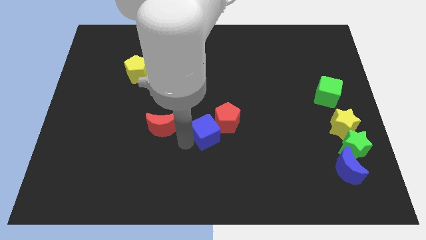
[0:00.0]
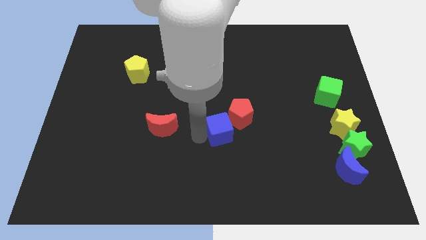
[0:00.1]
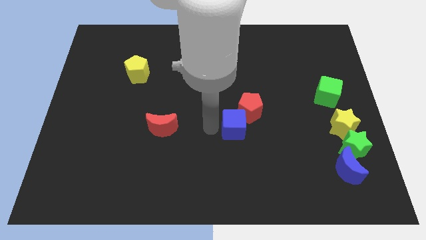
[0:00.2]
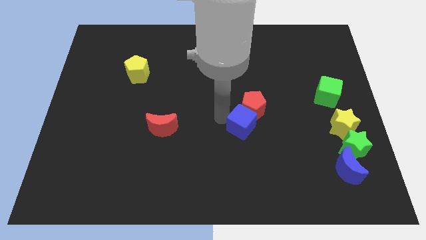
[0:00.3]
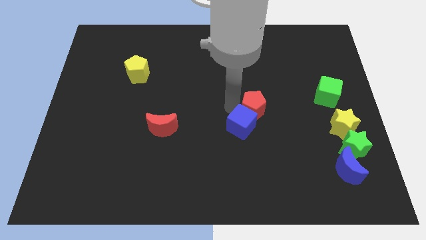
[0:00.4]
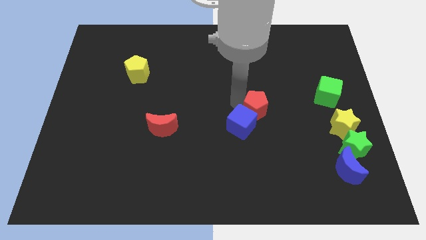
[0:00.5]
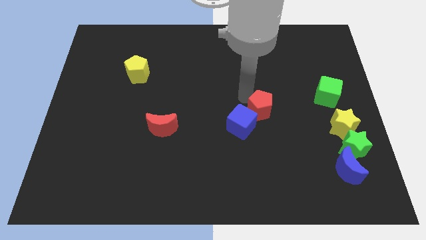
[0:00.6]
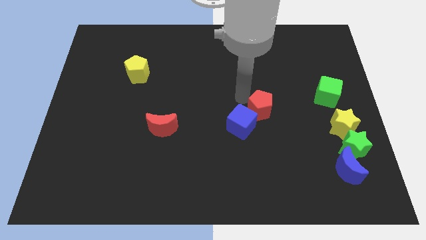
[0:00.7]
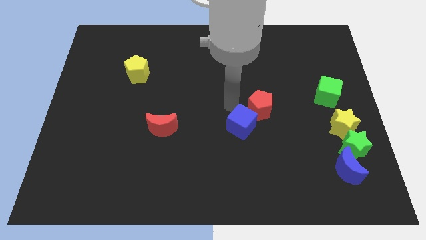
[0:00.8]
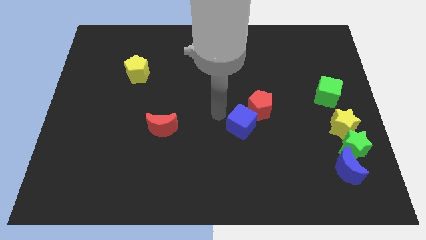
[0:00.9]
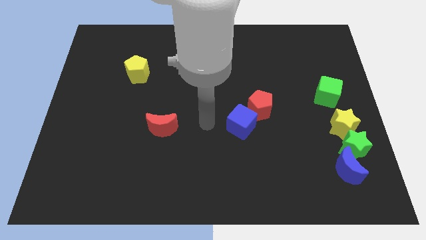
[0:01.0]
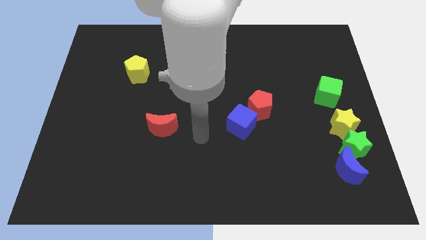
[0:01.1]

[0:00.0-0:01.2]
place your arm to the center of the board

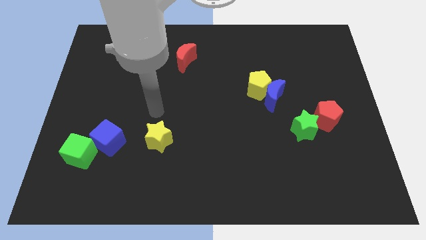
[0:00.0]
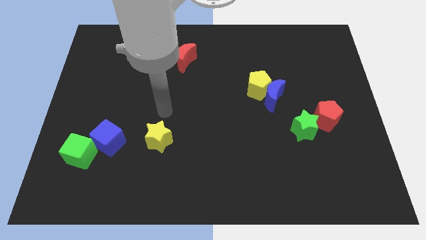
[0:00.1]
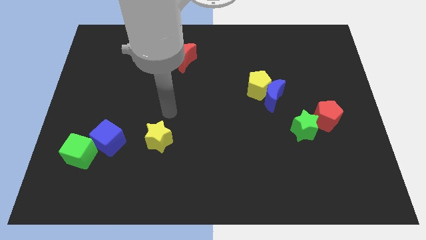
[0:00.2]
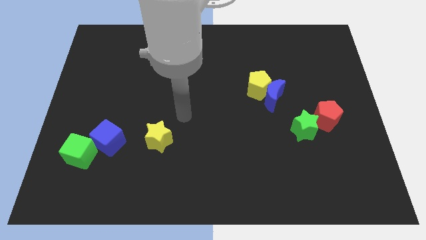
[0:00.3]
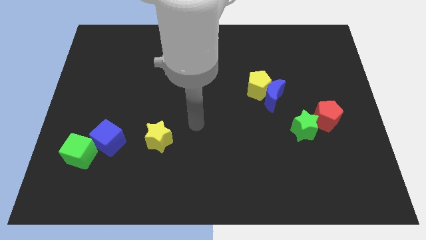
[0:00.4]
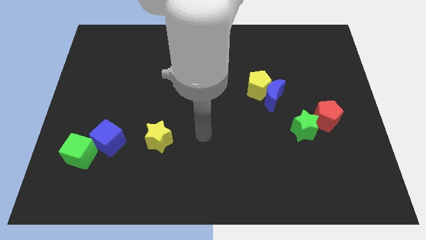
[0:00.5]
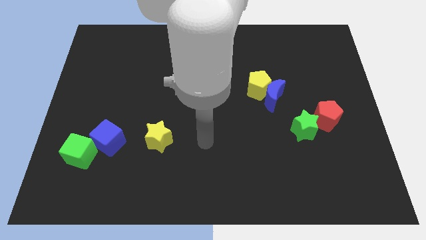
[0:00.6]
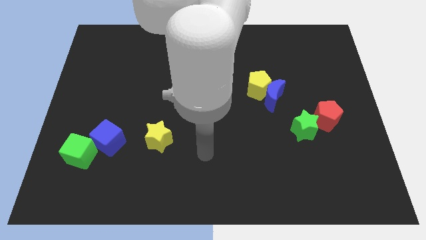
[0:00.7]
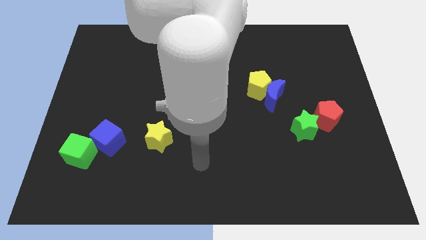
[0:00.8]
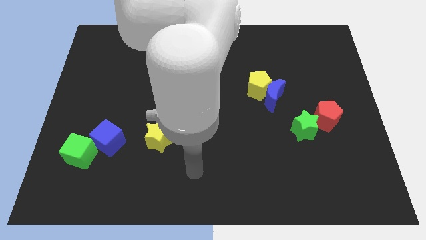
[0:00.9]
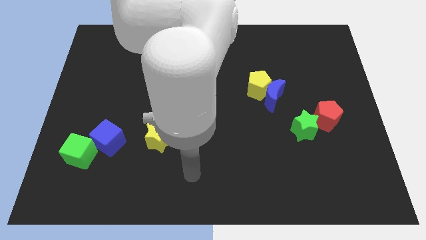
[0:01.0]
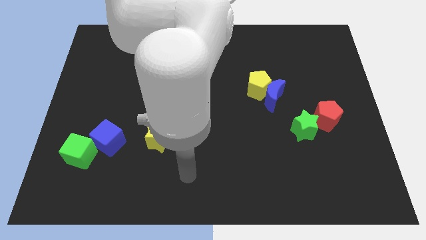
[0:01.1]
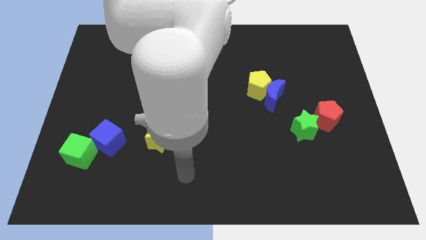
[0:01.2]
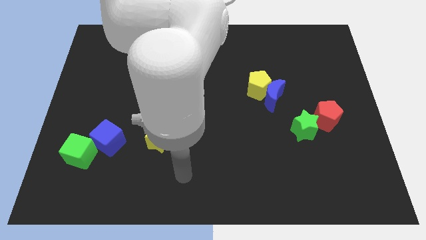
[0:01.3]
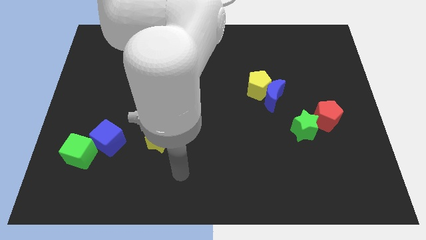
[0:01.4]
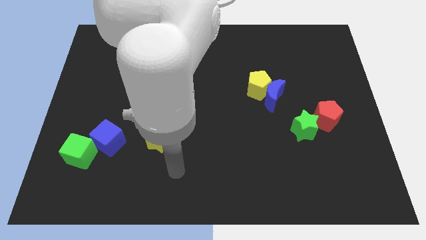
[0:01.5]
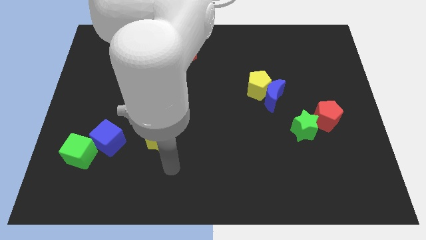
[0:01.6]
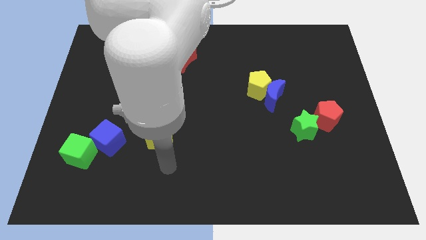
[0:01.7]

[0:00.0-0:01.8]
go near the yellow star

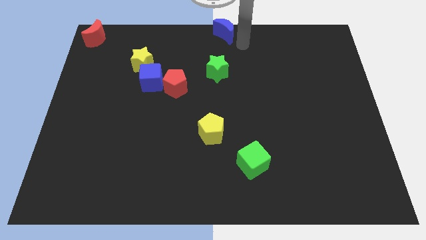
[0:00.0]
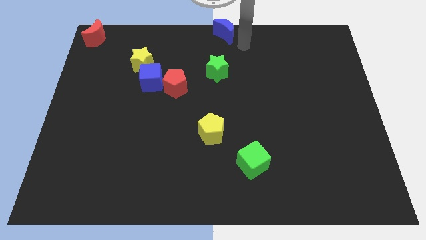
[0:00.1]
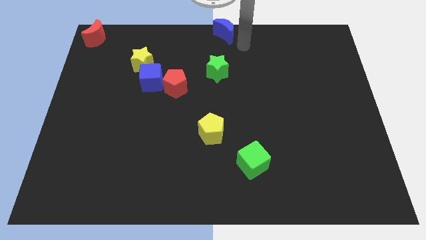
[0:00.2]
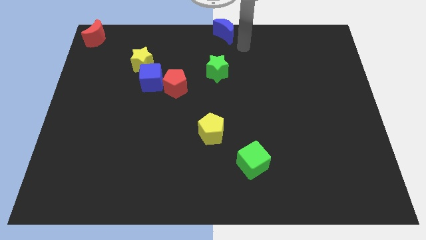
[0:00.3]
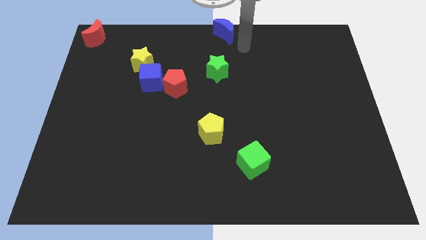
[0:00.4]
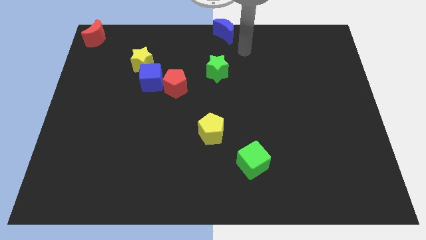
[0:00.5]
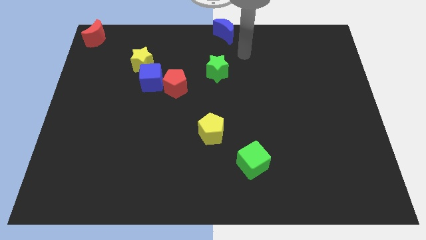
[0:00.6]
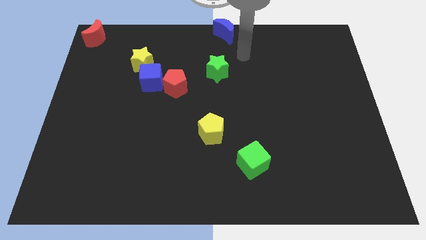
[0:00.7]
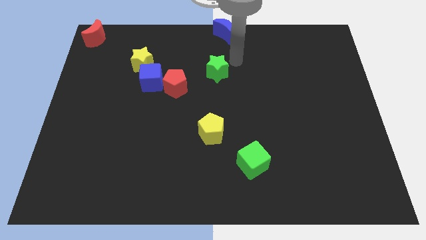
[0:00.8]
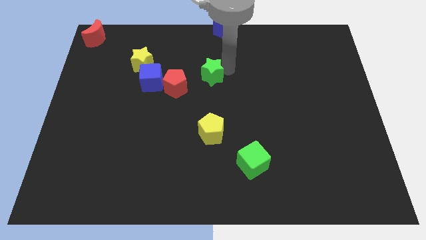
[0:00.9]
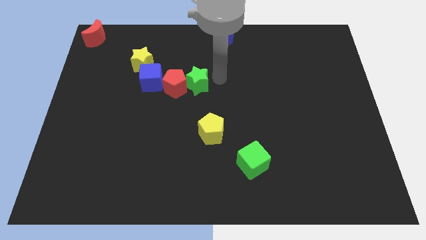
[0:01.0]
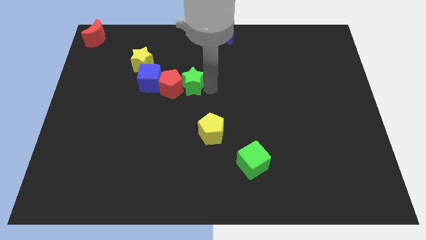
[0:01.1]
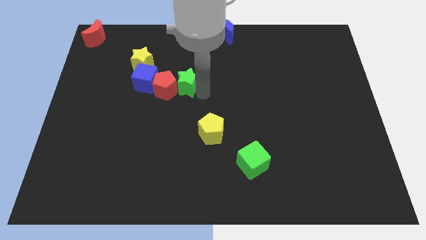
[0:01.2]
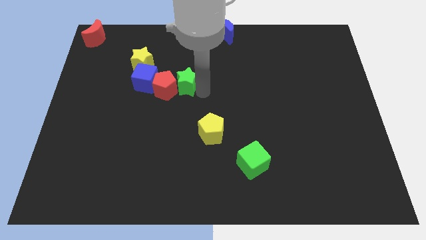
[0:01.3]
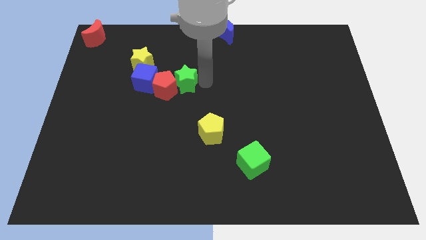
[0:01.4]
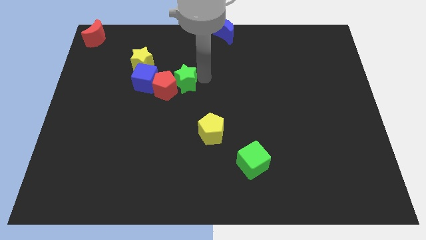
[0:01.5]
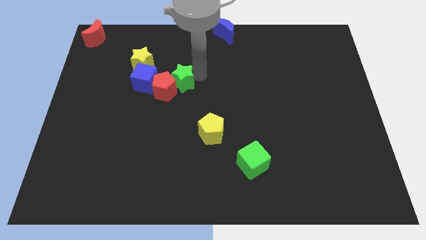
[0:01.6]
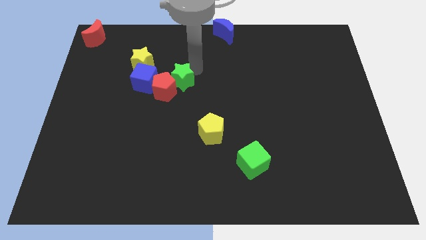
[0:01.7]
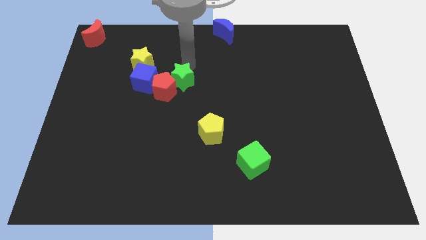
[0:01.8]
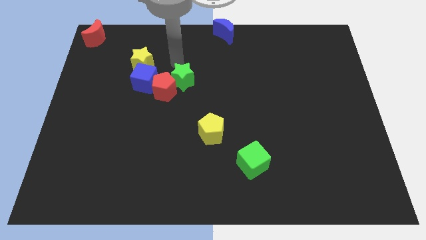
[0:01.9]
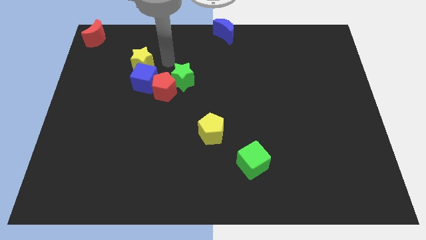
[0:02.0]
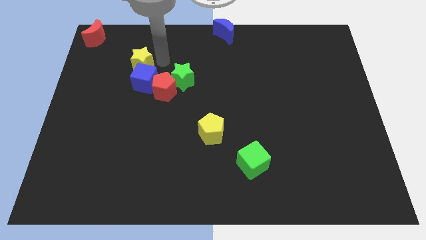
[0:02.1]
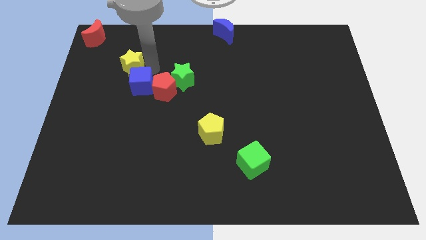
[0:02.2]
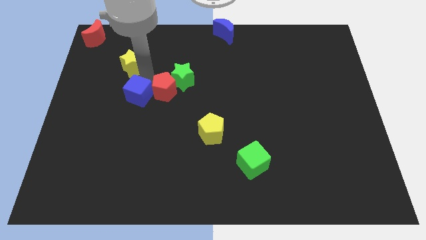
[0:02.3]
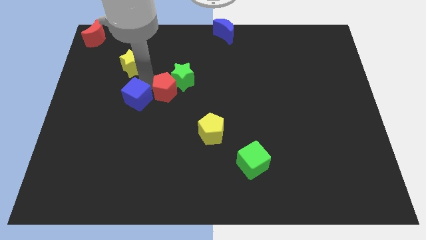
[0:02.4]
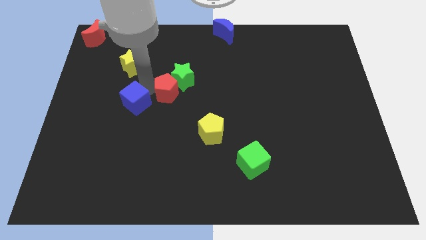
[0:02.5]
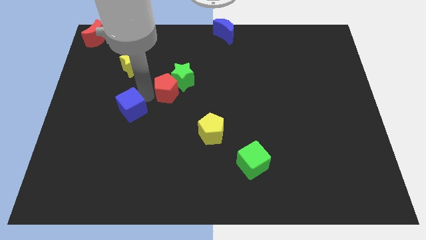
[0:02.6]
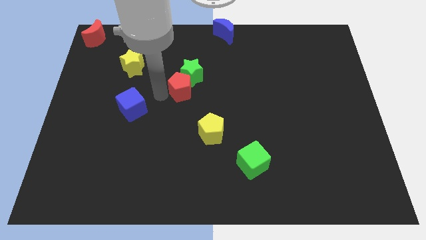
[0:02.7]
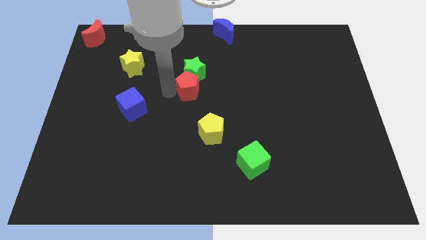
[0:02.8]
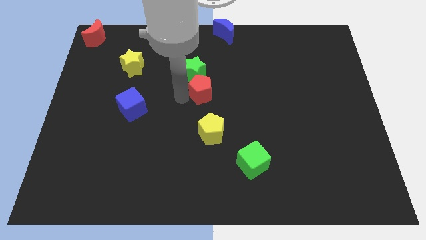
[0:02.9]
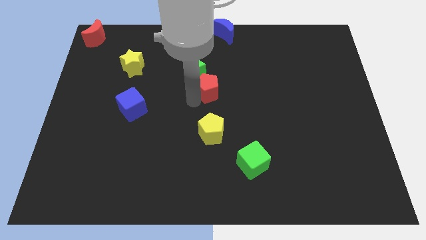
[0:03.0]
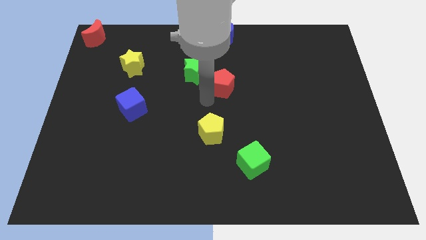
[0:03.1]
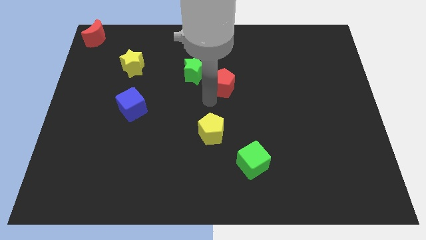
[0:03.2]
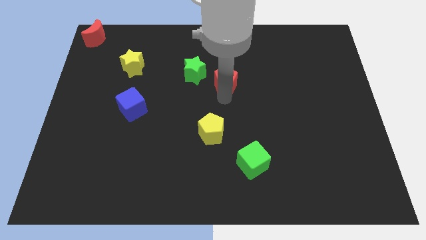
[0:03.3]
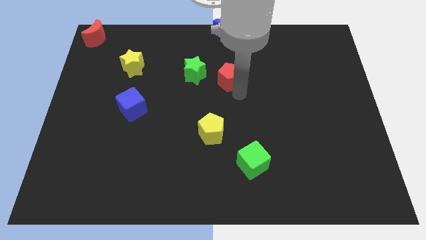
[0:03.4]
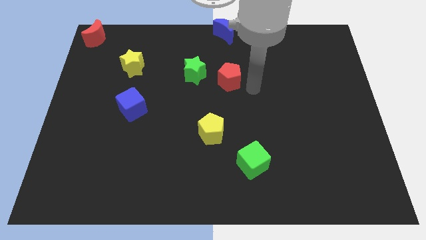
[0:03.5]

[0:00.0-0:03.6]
push red pentagon diagonal towards yellow pentagon

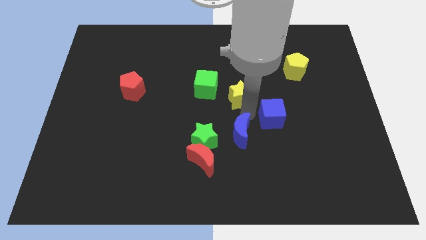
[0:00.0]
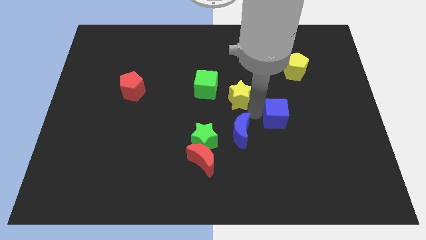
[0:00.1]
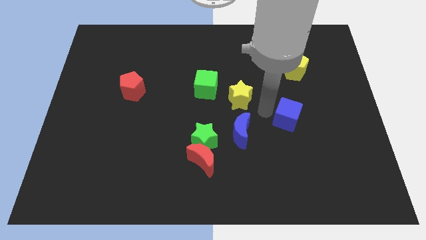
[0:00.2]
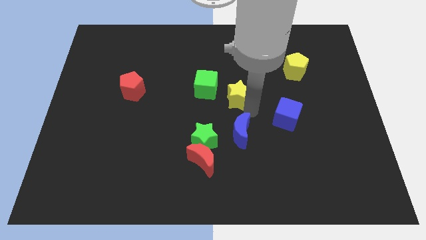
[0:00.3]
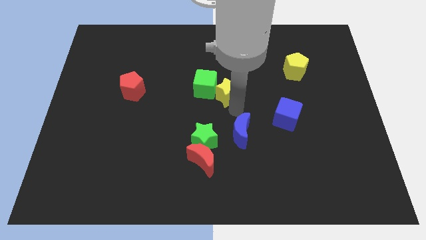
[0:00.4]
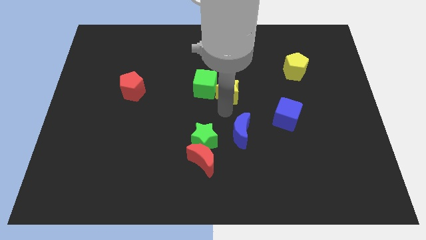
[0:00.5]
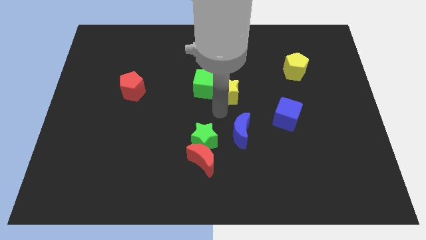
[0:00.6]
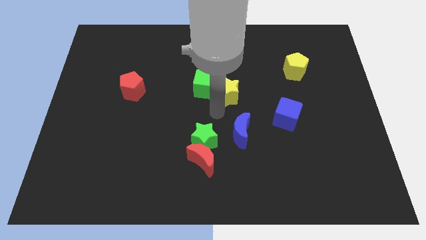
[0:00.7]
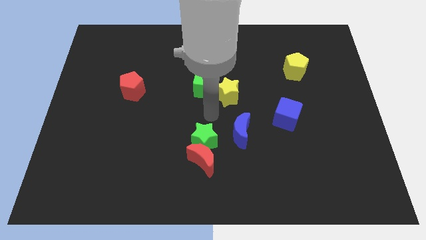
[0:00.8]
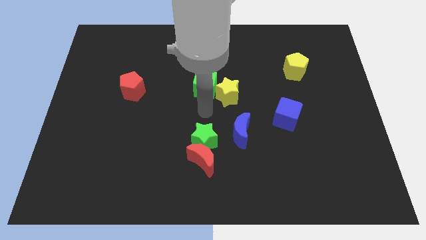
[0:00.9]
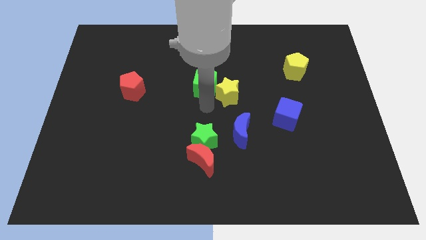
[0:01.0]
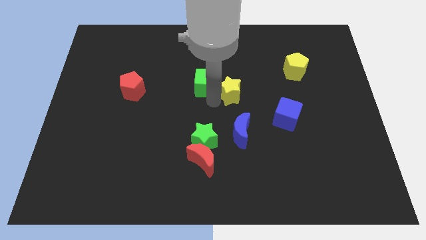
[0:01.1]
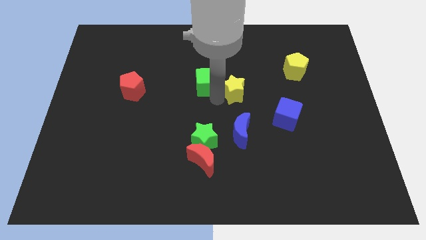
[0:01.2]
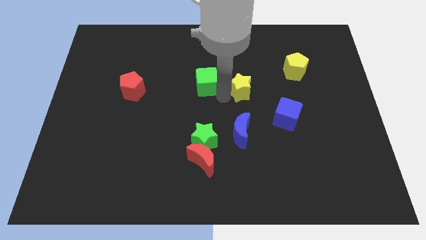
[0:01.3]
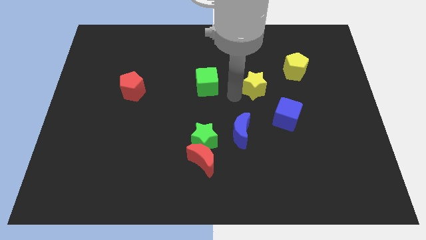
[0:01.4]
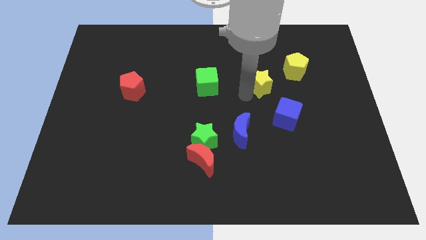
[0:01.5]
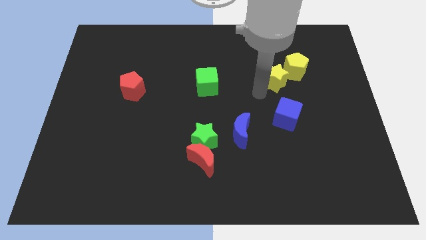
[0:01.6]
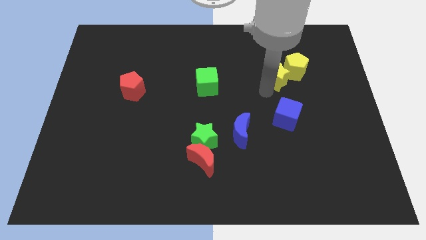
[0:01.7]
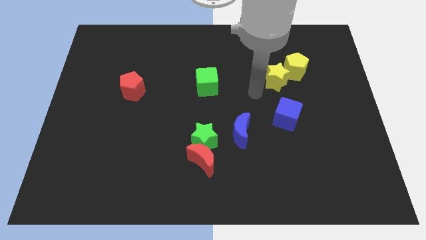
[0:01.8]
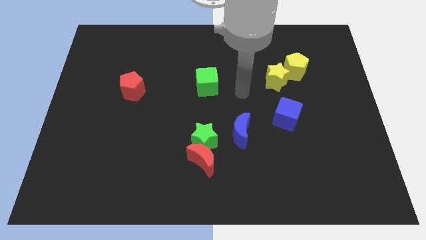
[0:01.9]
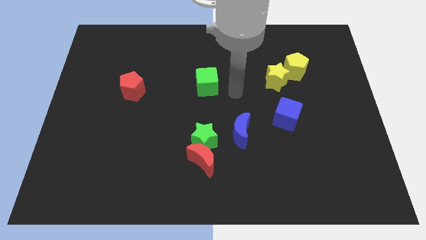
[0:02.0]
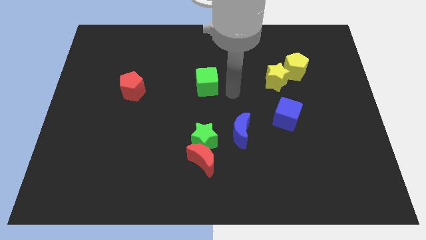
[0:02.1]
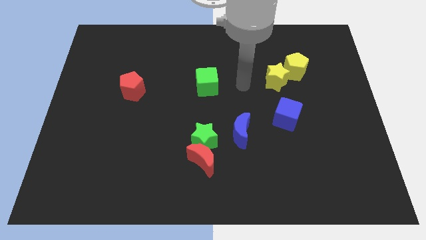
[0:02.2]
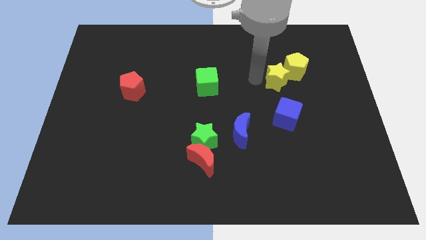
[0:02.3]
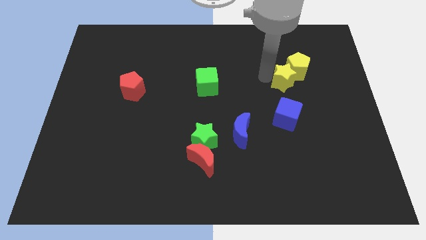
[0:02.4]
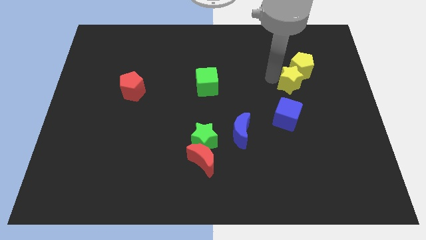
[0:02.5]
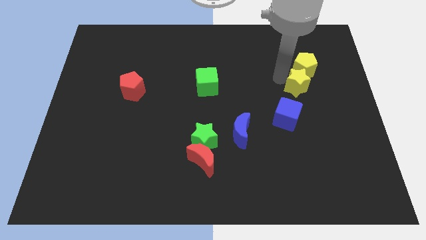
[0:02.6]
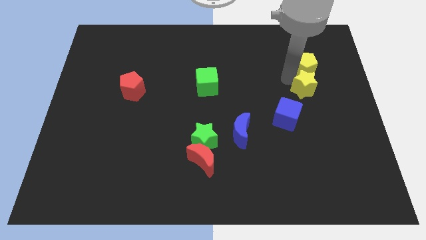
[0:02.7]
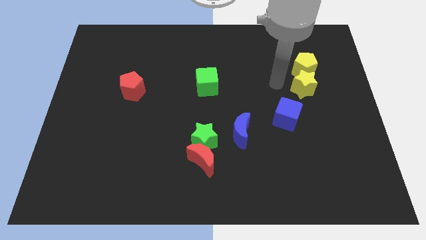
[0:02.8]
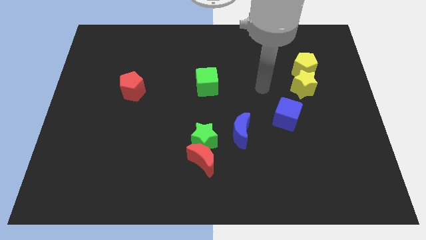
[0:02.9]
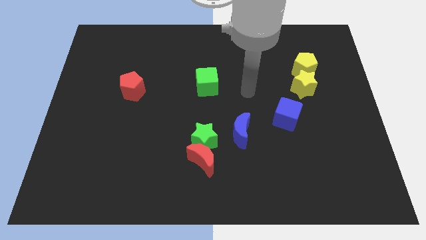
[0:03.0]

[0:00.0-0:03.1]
place yellow star to the bottom of yellow pentag
